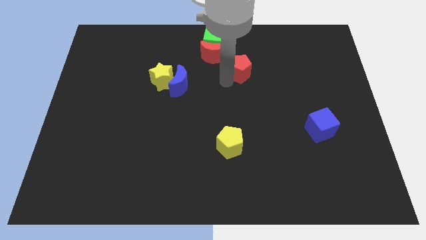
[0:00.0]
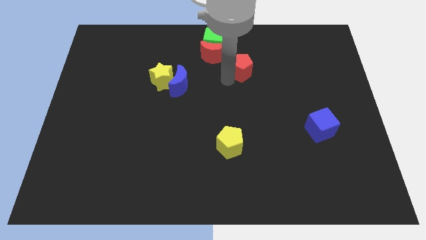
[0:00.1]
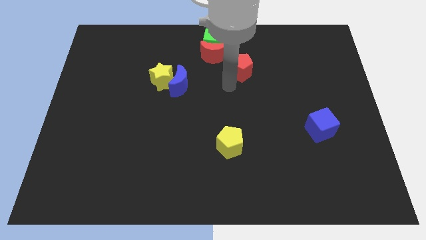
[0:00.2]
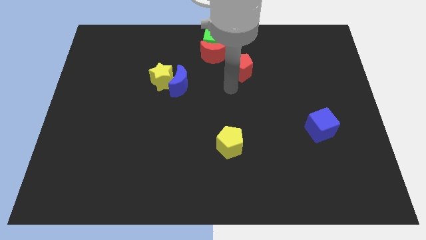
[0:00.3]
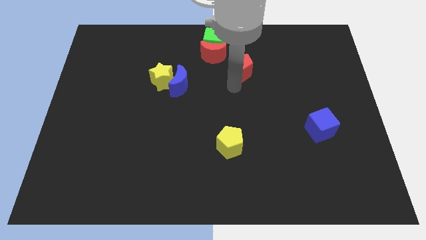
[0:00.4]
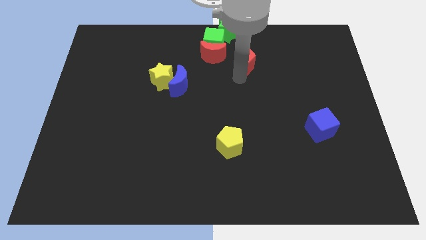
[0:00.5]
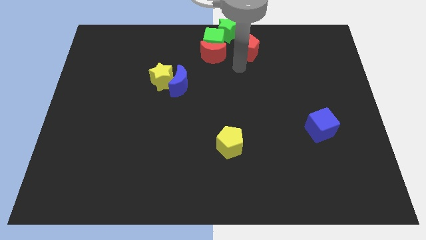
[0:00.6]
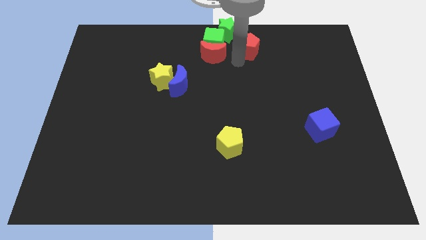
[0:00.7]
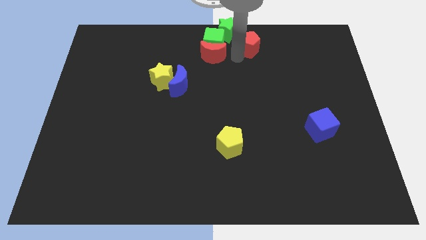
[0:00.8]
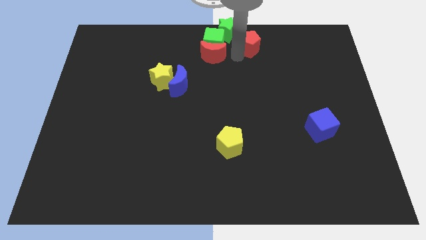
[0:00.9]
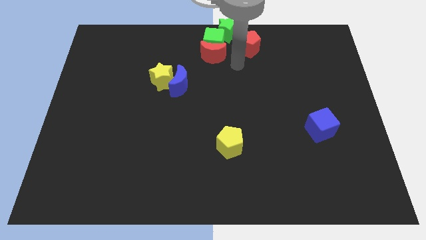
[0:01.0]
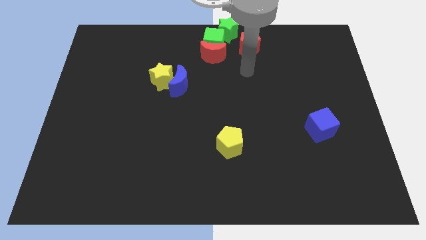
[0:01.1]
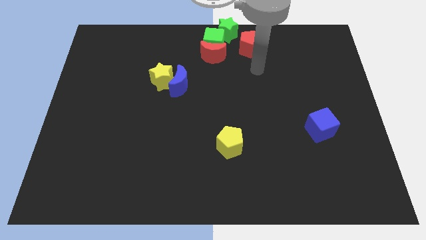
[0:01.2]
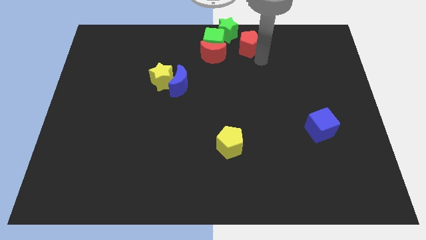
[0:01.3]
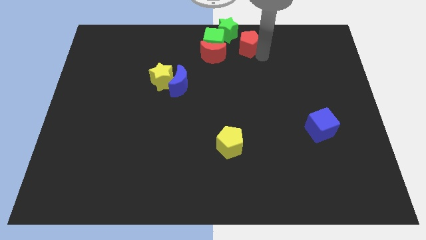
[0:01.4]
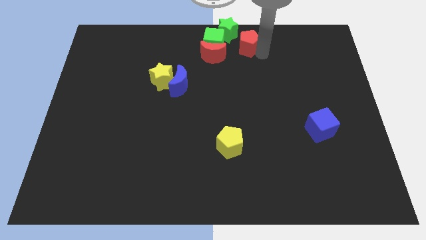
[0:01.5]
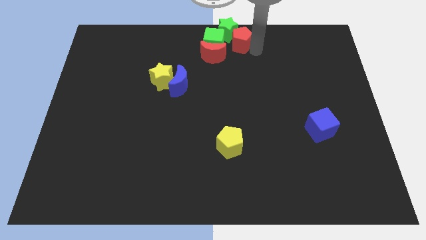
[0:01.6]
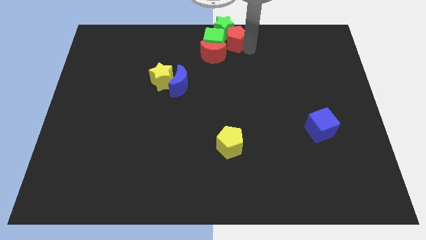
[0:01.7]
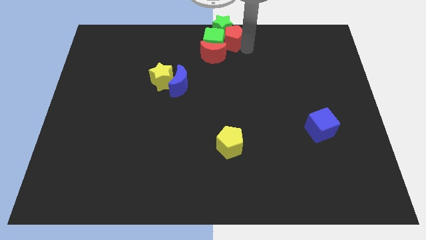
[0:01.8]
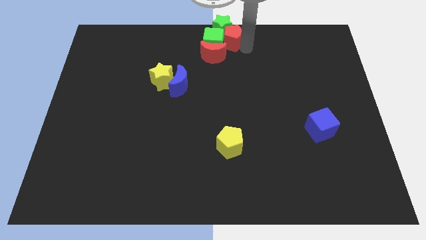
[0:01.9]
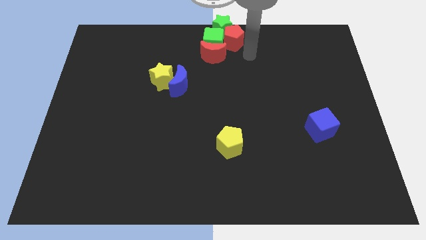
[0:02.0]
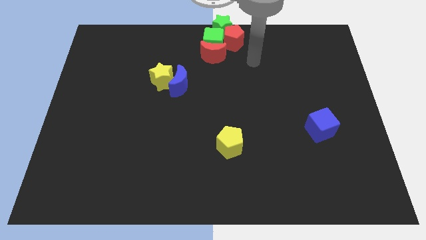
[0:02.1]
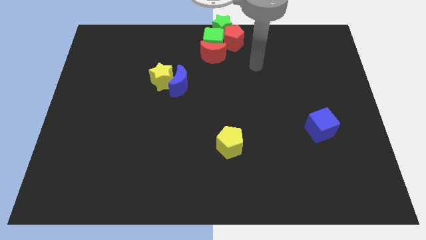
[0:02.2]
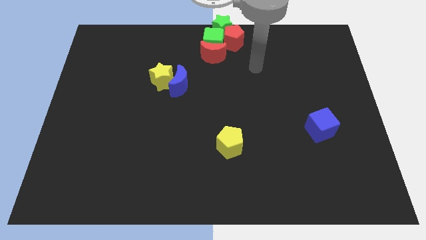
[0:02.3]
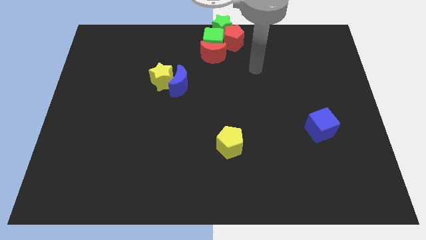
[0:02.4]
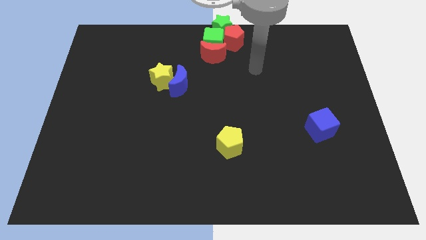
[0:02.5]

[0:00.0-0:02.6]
move red pentagon to the group of blocks

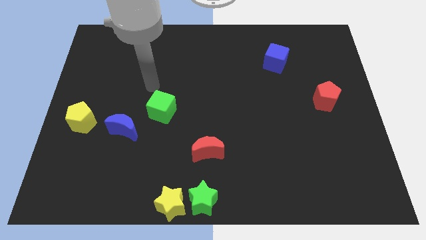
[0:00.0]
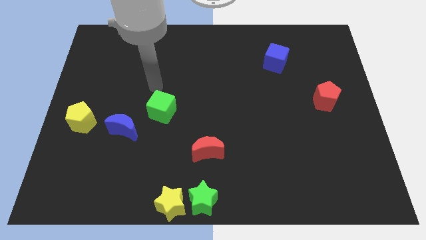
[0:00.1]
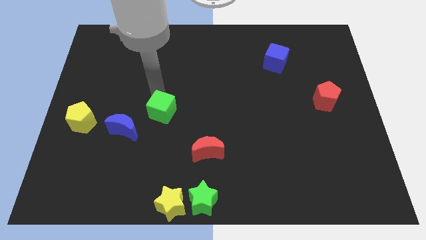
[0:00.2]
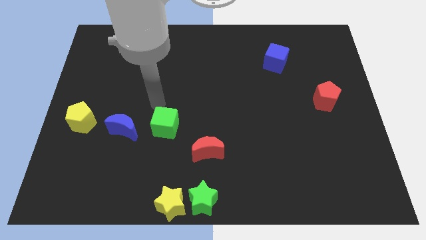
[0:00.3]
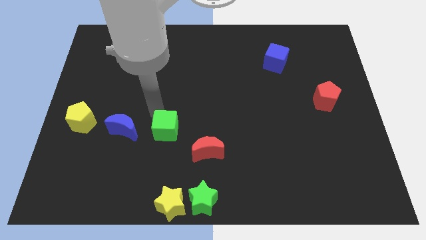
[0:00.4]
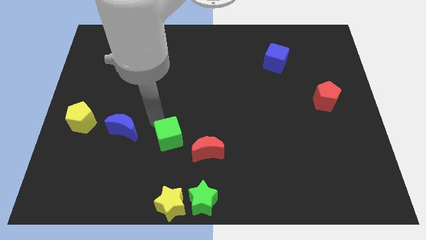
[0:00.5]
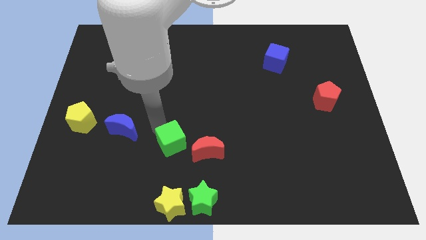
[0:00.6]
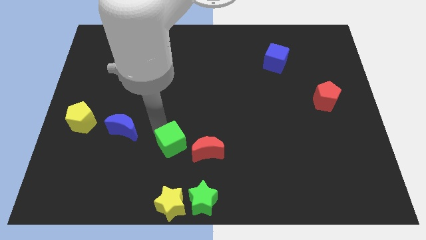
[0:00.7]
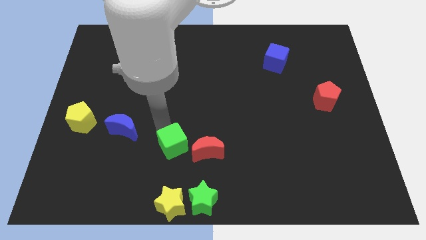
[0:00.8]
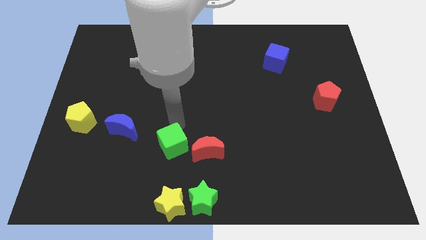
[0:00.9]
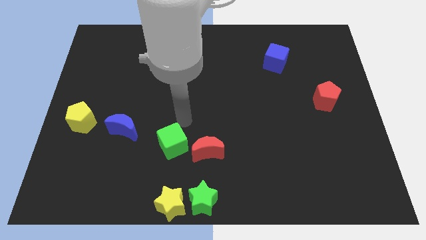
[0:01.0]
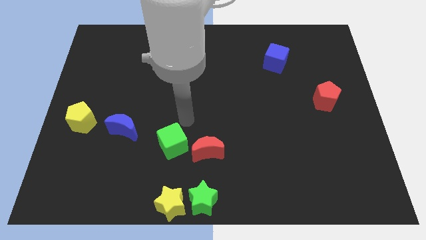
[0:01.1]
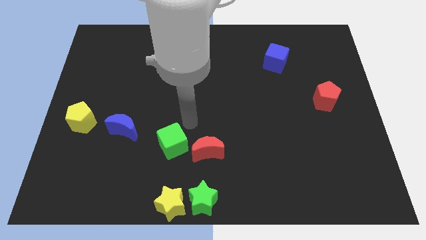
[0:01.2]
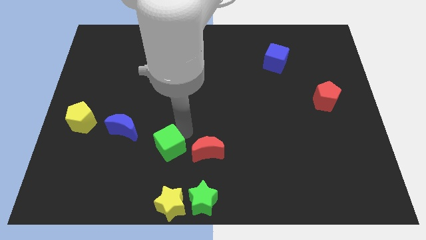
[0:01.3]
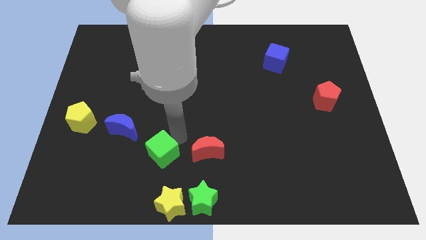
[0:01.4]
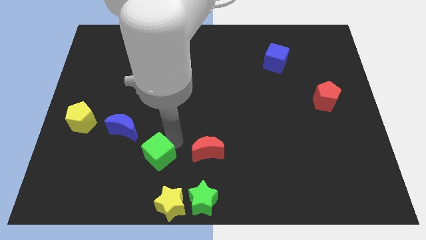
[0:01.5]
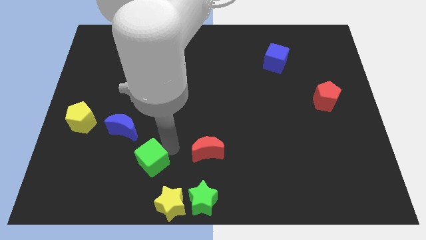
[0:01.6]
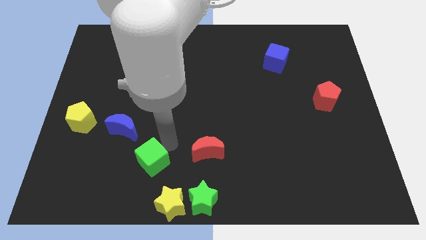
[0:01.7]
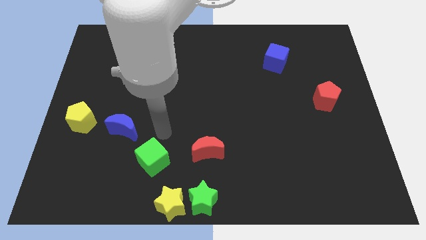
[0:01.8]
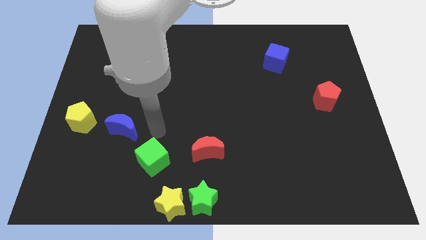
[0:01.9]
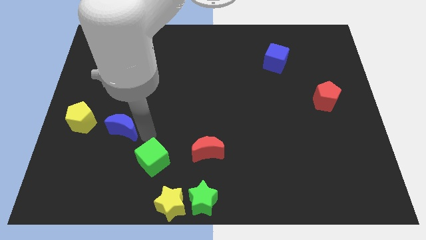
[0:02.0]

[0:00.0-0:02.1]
put the green cube to the left of the red crescent

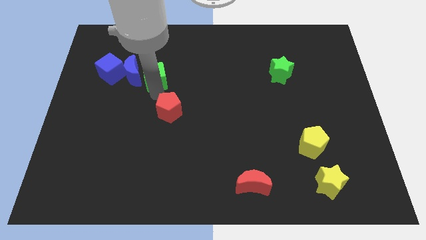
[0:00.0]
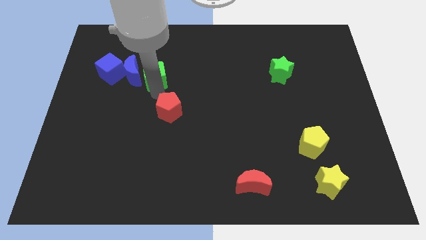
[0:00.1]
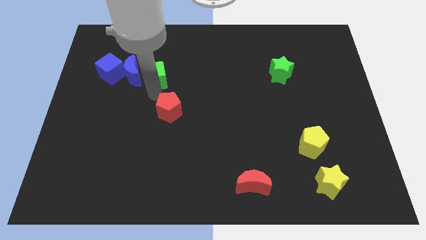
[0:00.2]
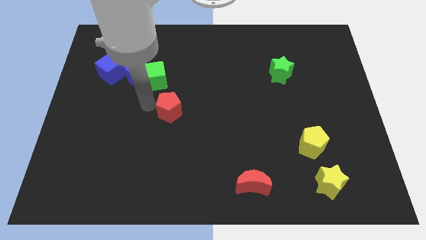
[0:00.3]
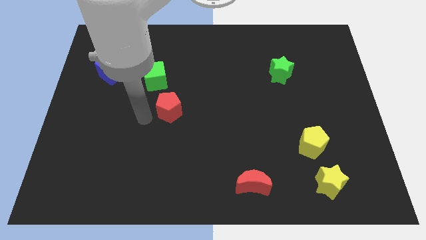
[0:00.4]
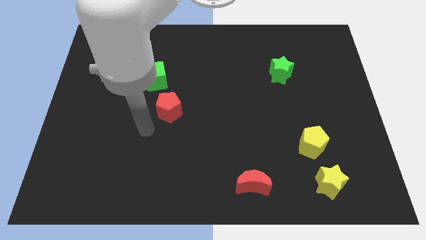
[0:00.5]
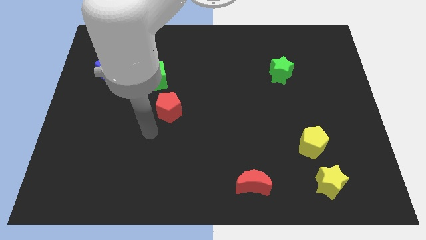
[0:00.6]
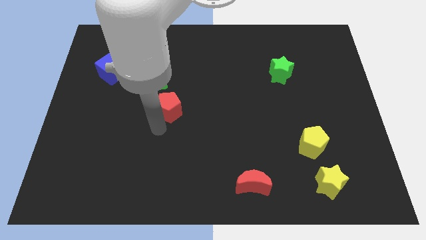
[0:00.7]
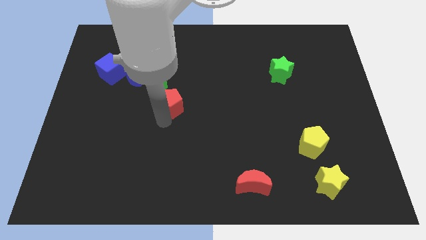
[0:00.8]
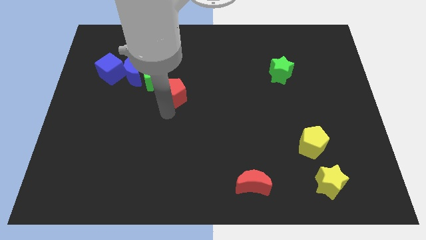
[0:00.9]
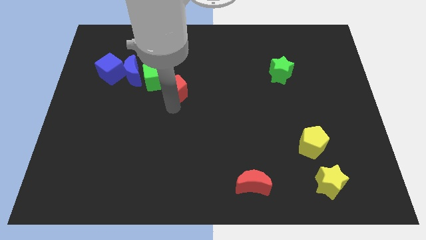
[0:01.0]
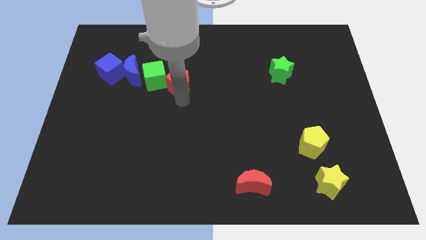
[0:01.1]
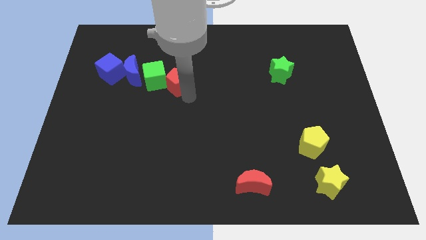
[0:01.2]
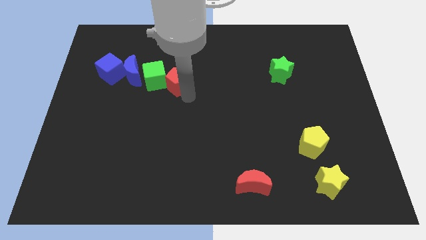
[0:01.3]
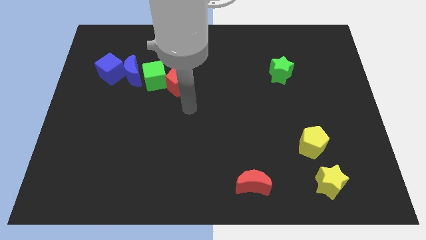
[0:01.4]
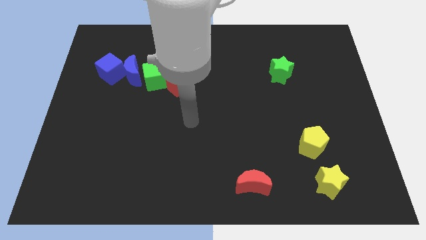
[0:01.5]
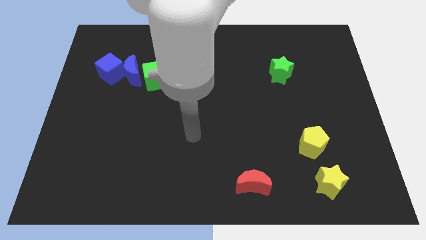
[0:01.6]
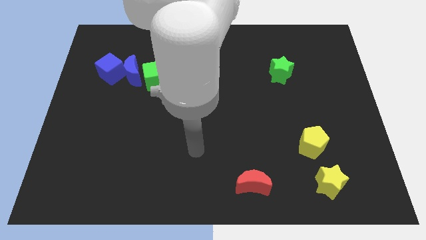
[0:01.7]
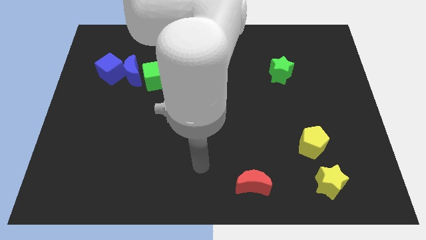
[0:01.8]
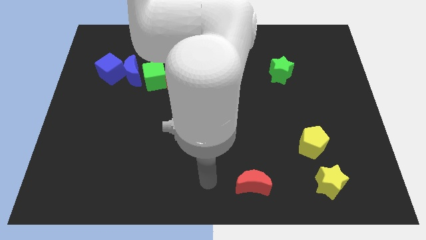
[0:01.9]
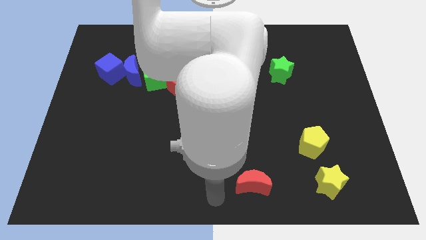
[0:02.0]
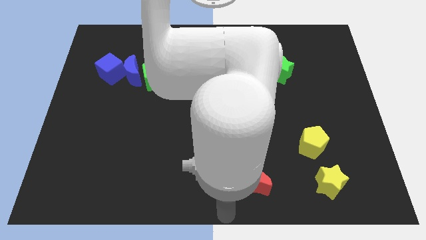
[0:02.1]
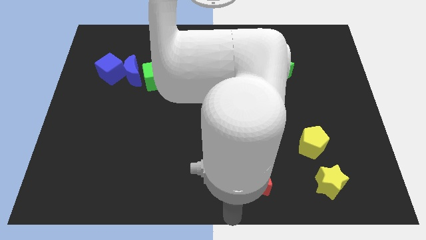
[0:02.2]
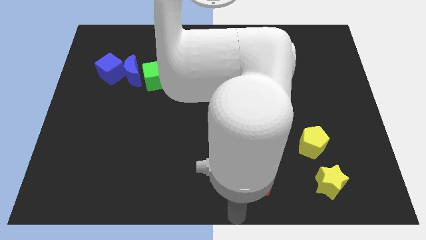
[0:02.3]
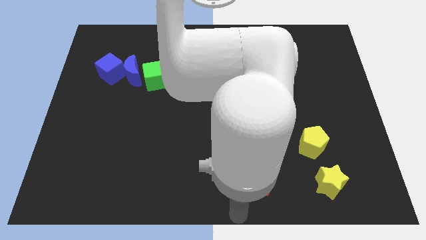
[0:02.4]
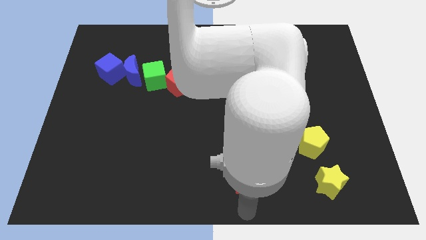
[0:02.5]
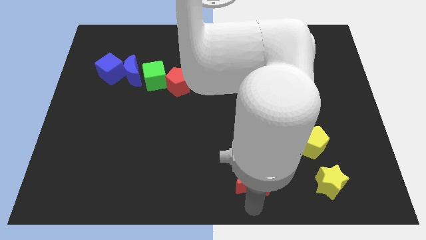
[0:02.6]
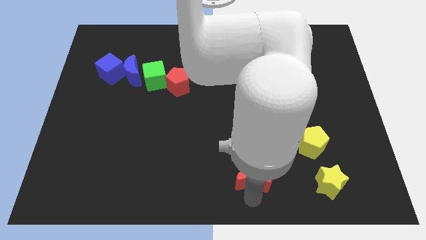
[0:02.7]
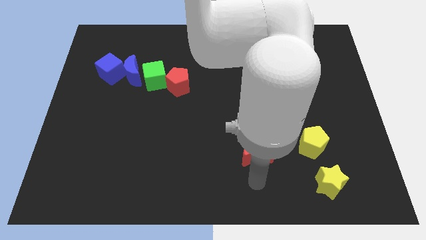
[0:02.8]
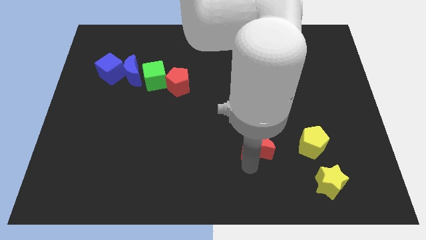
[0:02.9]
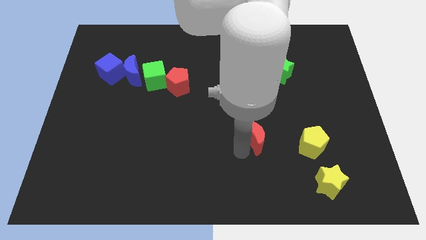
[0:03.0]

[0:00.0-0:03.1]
move the red crescent towards the left side of the yellow pentagon

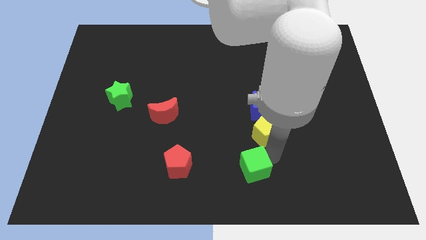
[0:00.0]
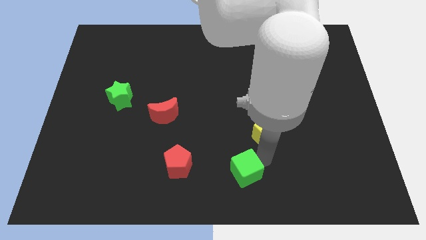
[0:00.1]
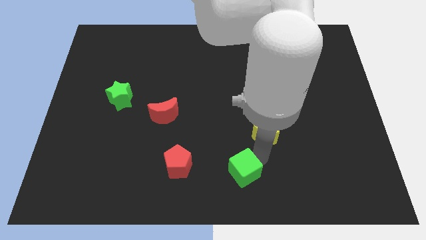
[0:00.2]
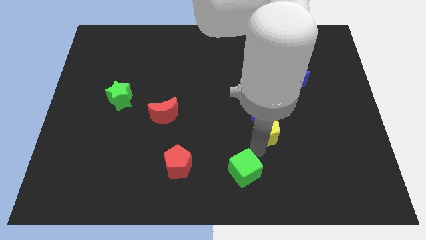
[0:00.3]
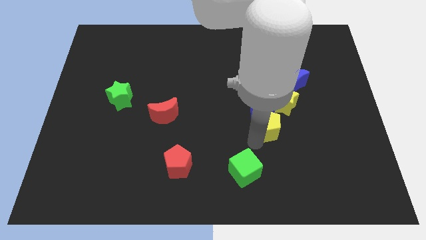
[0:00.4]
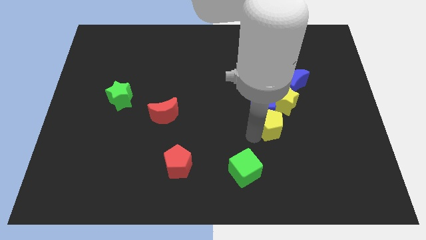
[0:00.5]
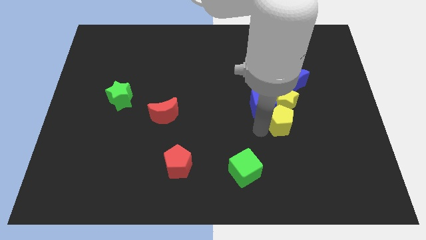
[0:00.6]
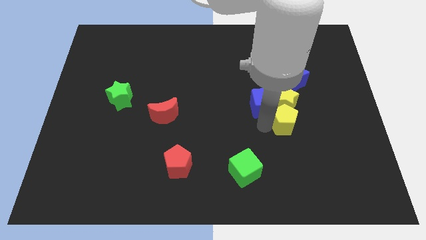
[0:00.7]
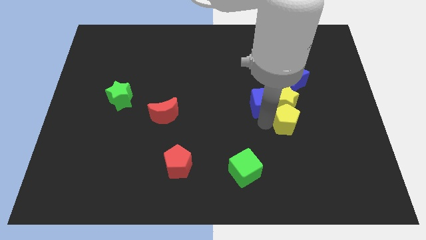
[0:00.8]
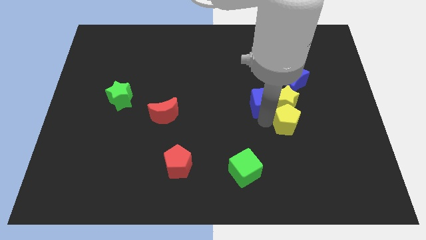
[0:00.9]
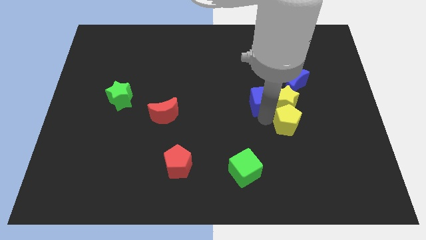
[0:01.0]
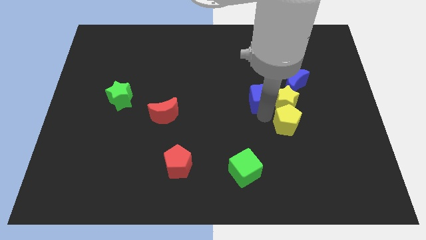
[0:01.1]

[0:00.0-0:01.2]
move the yellow pentagon into the bottom side of the yellow star

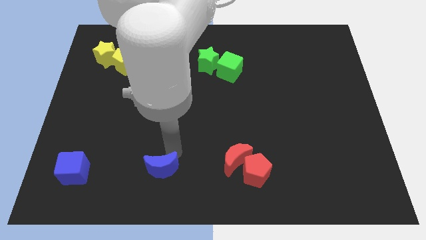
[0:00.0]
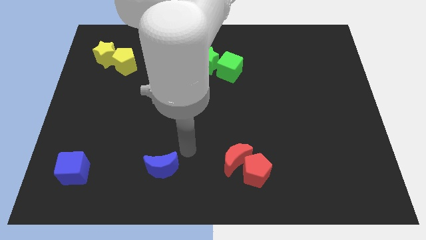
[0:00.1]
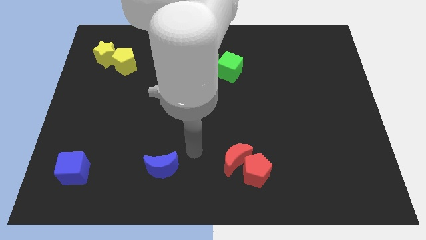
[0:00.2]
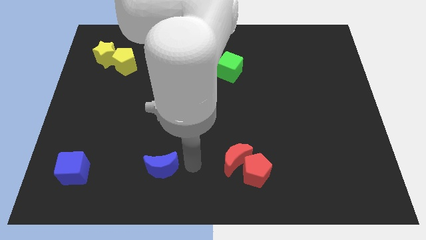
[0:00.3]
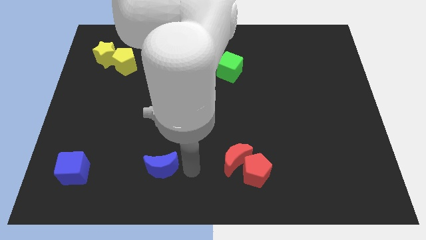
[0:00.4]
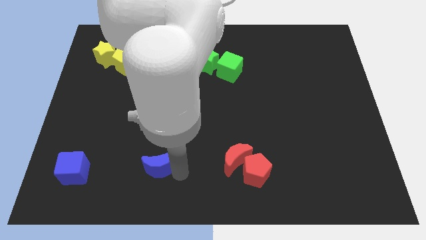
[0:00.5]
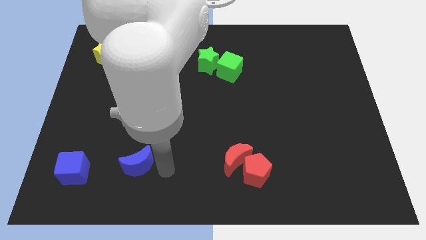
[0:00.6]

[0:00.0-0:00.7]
slightly move the blue moon towards the left
